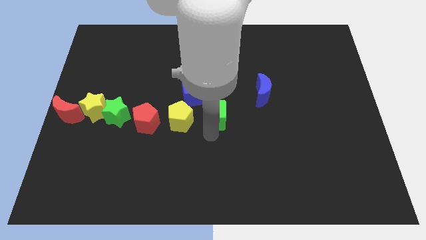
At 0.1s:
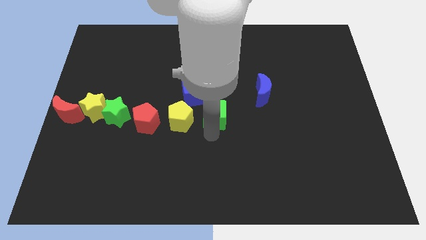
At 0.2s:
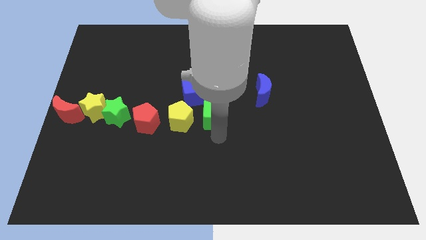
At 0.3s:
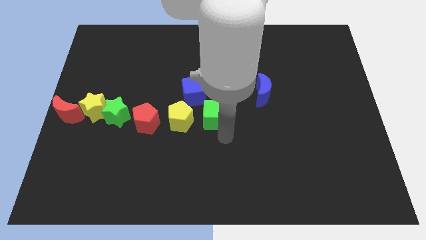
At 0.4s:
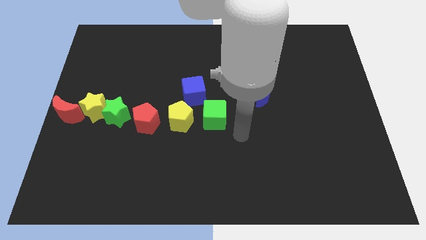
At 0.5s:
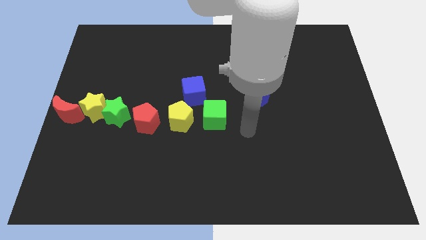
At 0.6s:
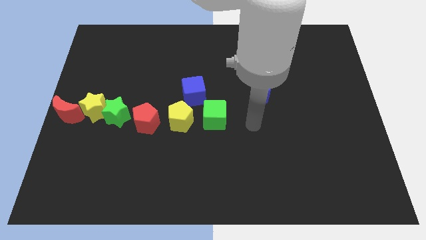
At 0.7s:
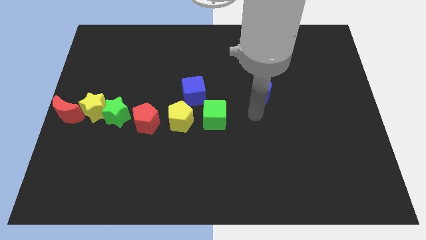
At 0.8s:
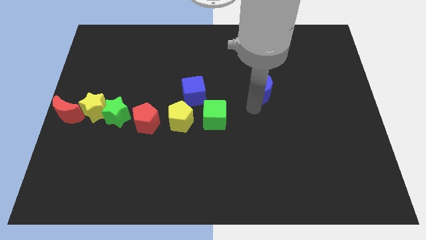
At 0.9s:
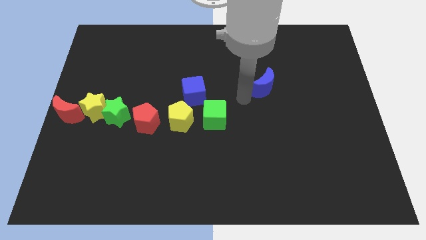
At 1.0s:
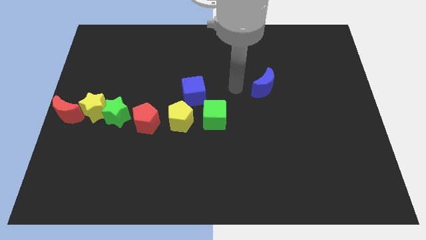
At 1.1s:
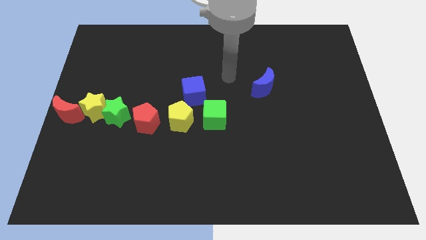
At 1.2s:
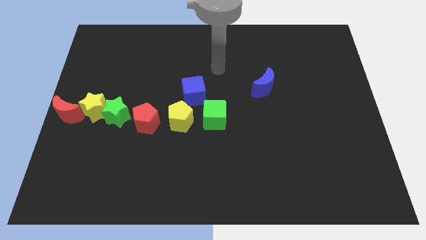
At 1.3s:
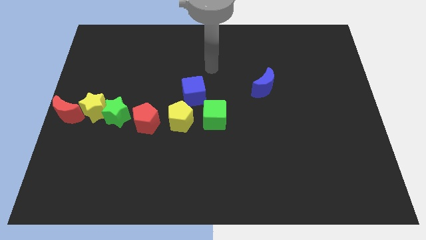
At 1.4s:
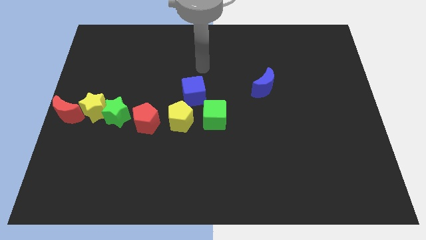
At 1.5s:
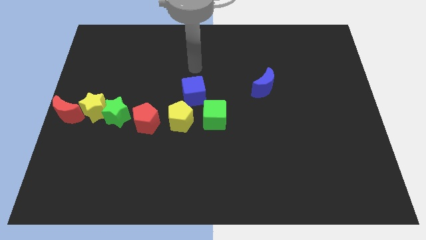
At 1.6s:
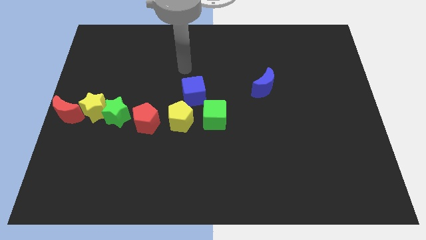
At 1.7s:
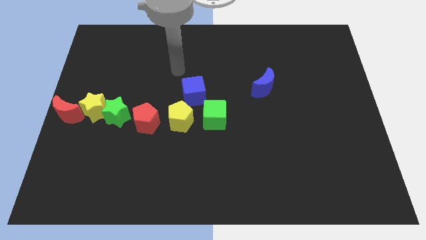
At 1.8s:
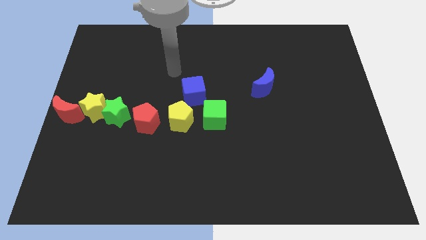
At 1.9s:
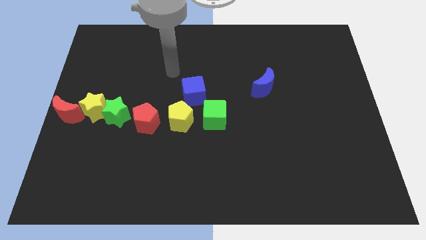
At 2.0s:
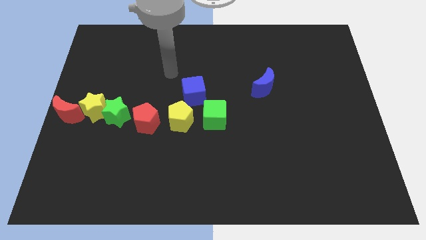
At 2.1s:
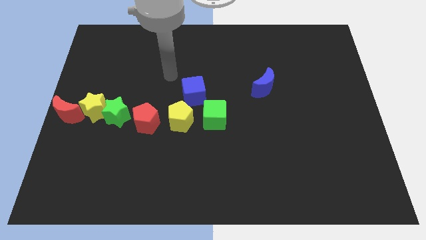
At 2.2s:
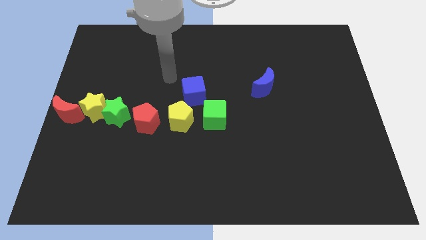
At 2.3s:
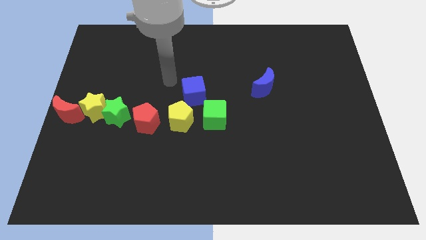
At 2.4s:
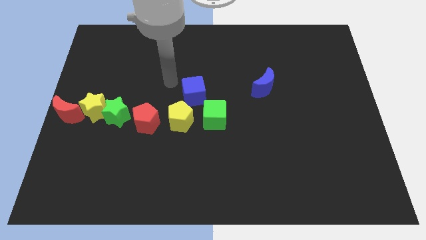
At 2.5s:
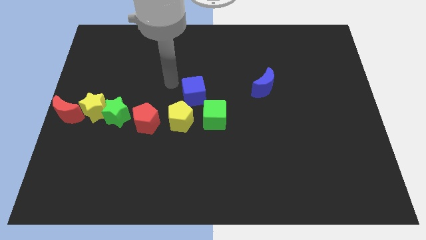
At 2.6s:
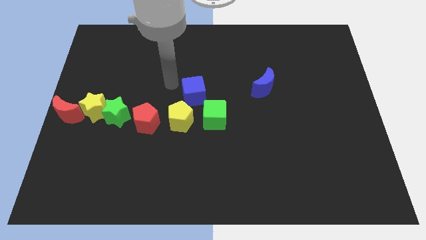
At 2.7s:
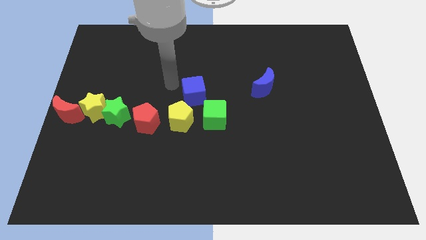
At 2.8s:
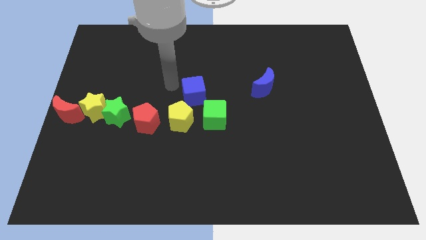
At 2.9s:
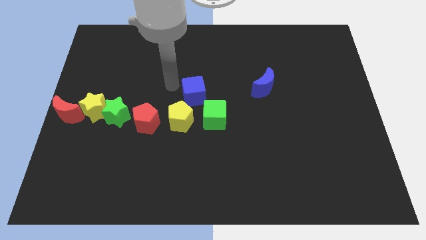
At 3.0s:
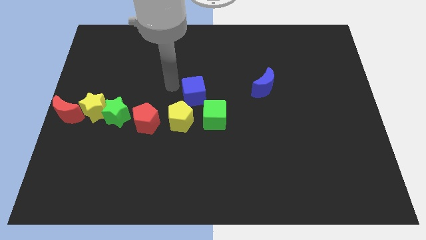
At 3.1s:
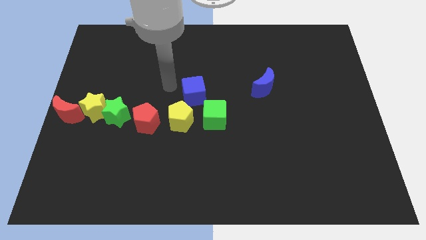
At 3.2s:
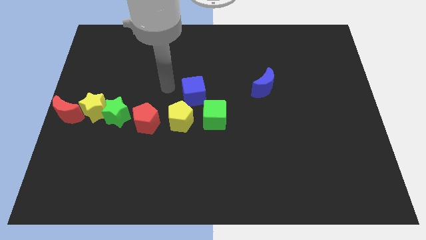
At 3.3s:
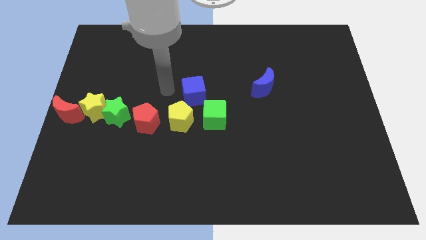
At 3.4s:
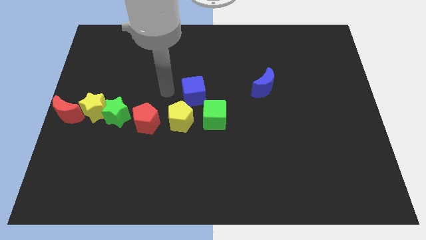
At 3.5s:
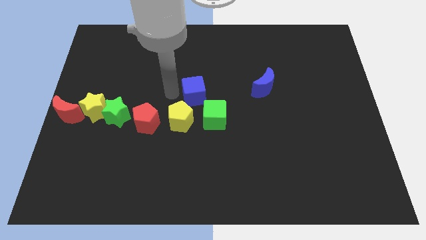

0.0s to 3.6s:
point your hand to the left of the blue cube

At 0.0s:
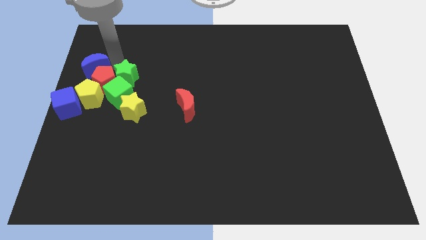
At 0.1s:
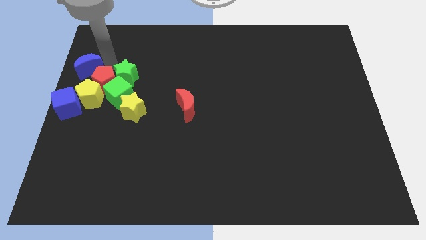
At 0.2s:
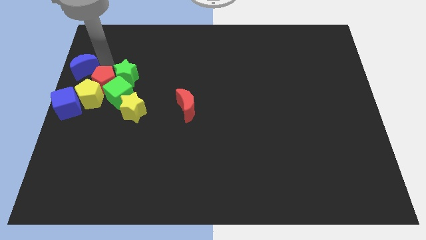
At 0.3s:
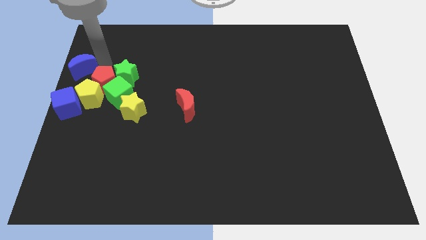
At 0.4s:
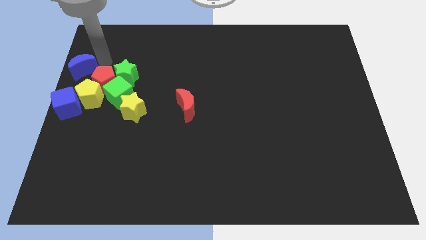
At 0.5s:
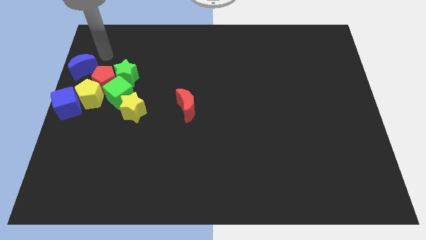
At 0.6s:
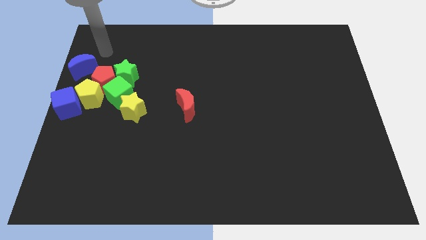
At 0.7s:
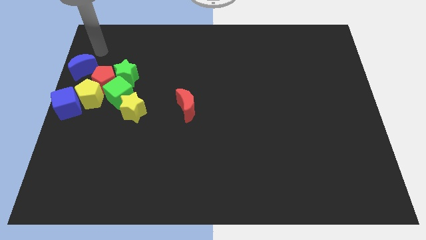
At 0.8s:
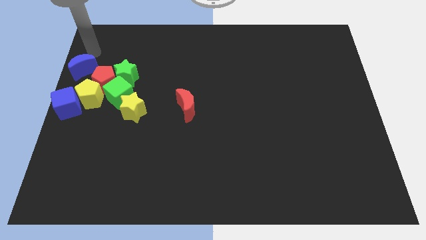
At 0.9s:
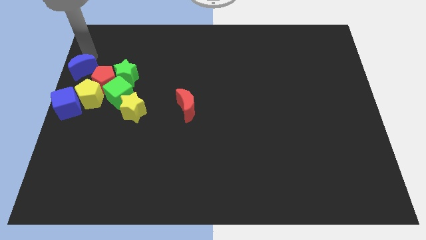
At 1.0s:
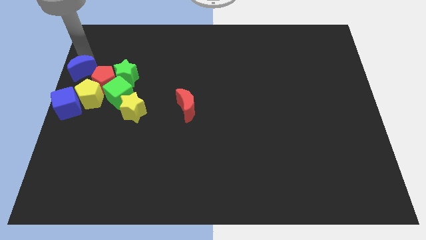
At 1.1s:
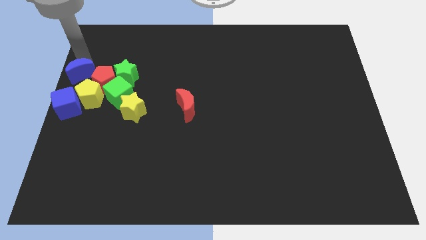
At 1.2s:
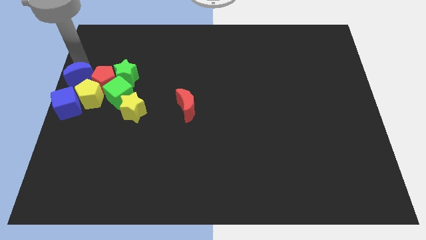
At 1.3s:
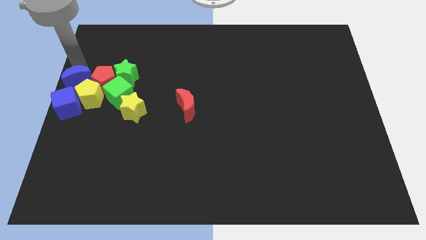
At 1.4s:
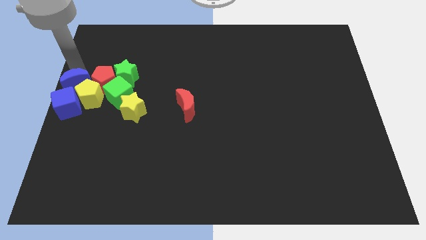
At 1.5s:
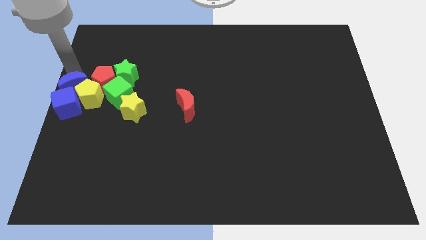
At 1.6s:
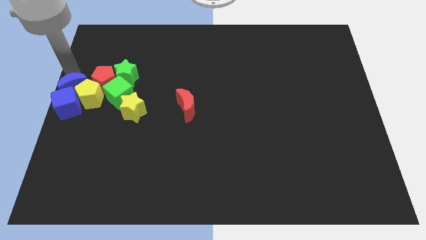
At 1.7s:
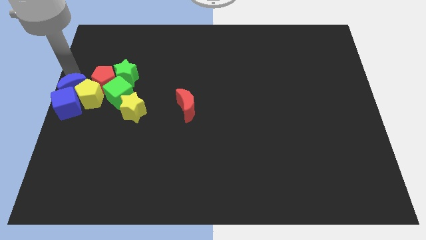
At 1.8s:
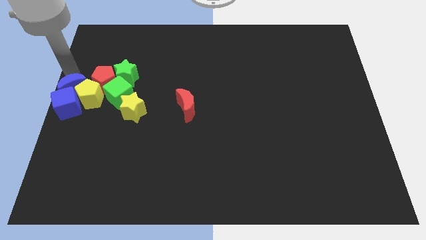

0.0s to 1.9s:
move the blue crescent above the blue cube

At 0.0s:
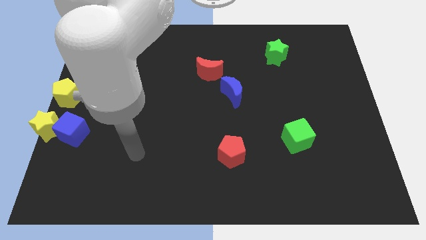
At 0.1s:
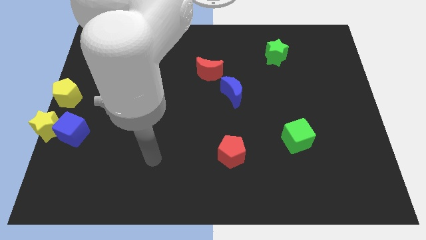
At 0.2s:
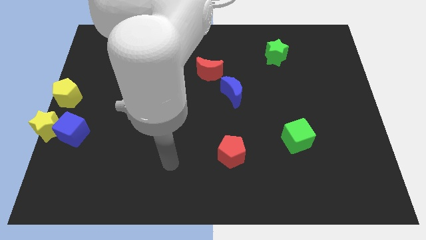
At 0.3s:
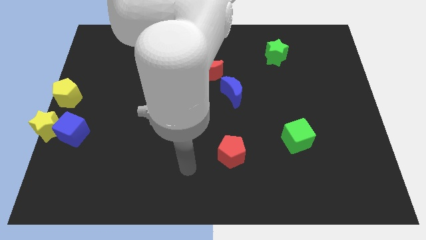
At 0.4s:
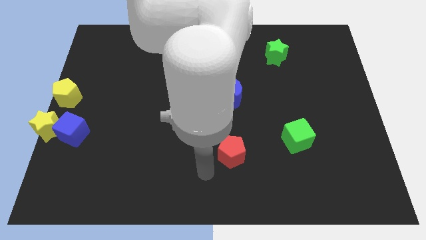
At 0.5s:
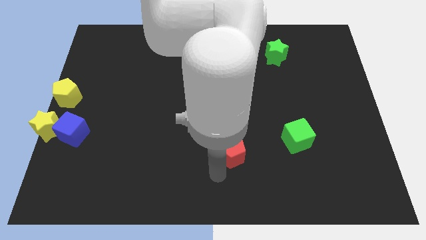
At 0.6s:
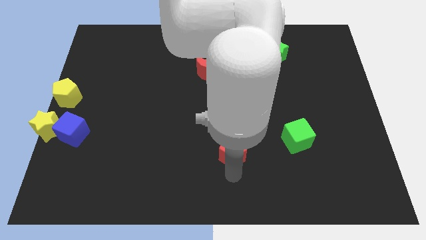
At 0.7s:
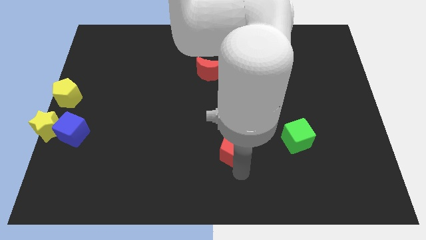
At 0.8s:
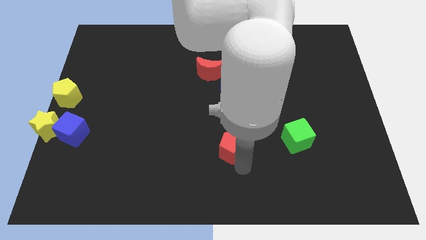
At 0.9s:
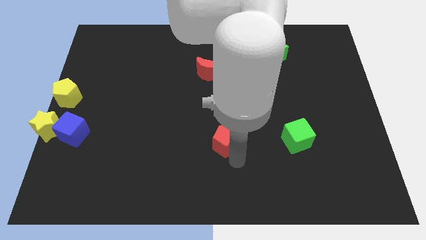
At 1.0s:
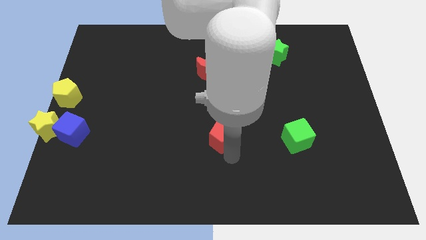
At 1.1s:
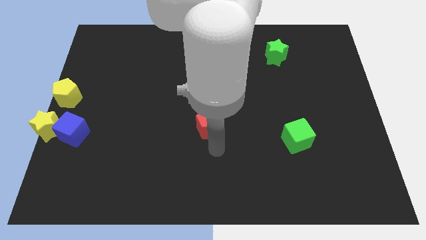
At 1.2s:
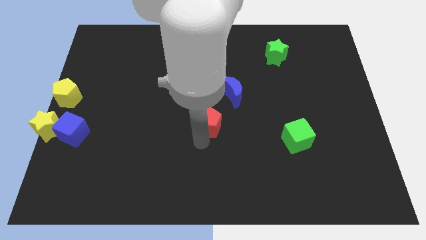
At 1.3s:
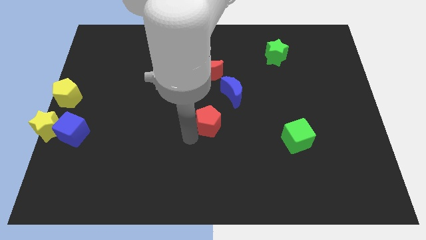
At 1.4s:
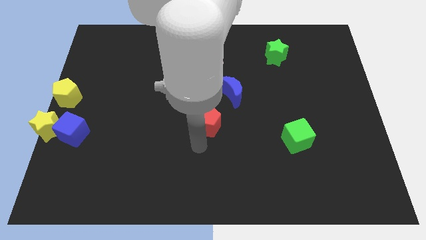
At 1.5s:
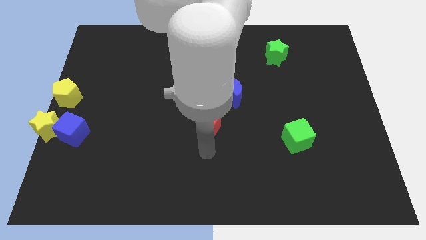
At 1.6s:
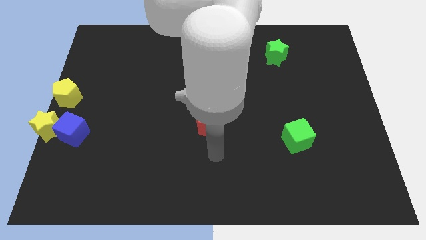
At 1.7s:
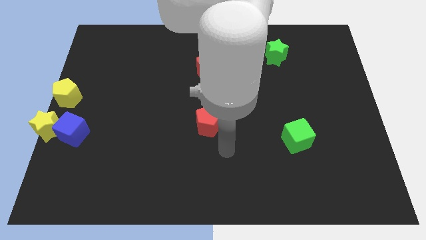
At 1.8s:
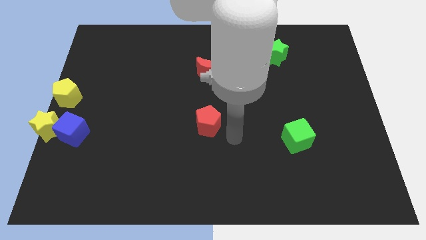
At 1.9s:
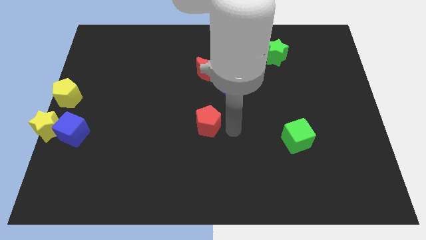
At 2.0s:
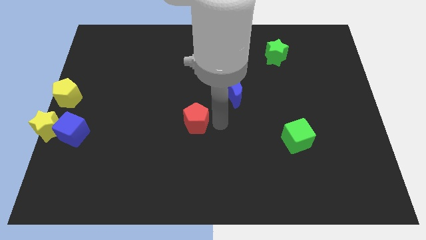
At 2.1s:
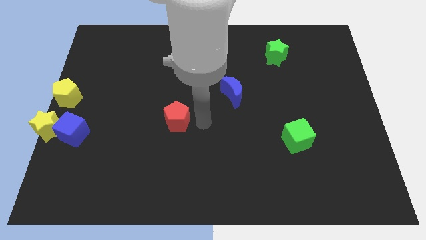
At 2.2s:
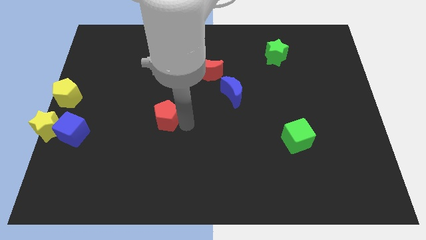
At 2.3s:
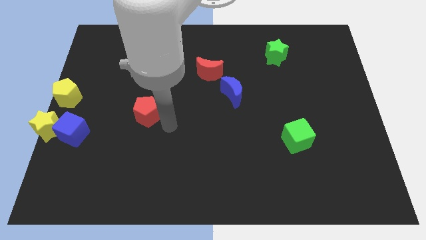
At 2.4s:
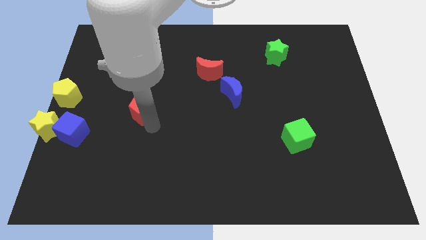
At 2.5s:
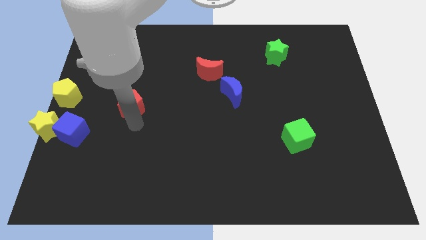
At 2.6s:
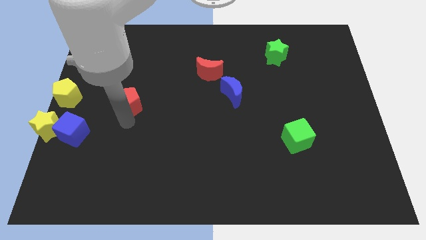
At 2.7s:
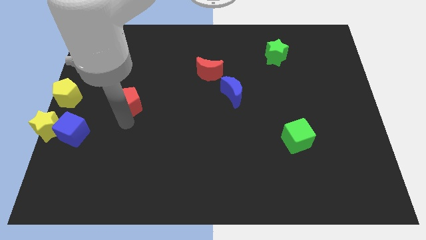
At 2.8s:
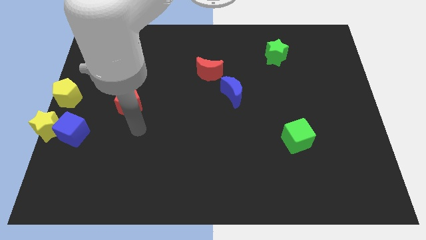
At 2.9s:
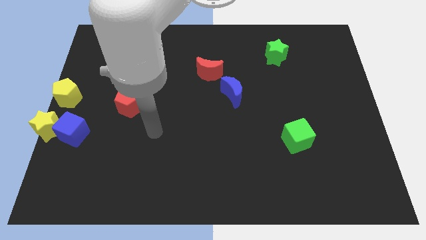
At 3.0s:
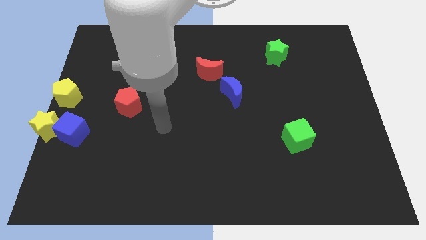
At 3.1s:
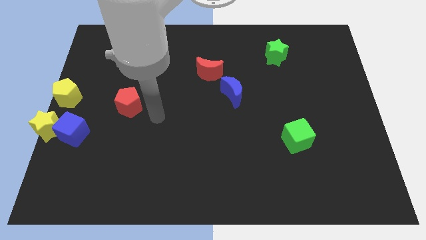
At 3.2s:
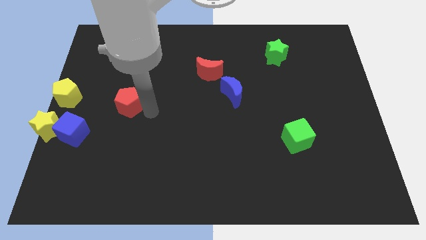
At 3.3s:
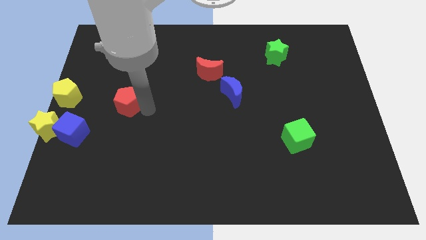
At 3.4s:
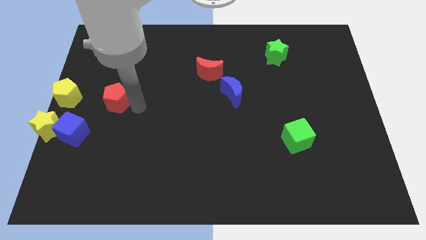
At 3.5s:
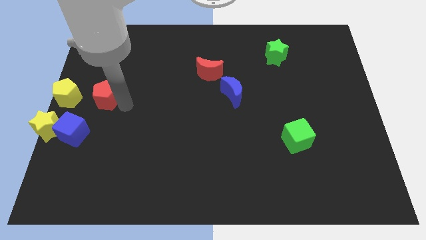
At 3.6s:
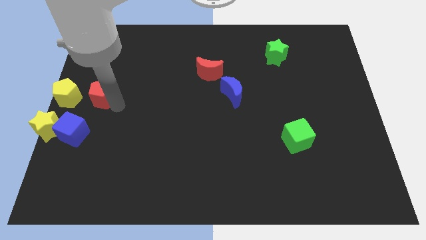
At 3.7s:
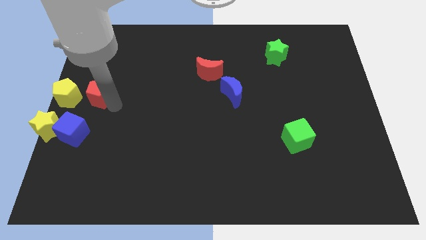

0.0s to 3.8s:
push the red pentagon to the right side of the yellow pentagon
